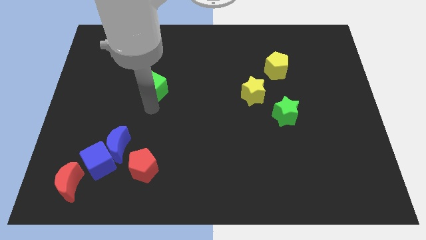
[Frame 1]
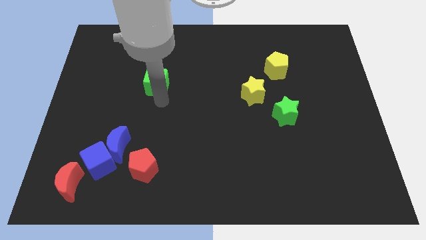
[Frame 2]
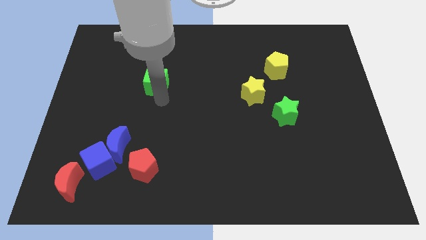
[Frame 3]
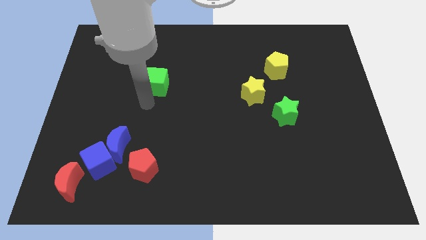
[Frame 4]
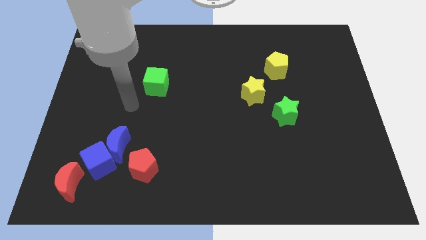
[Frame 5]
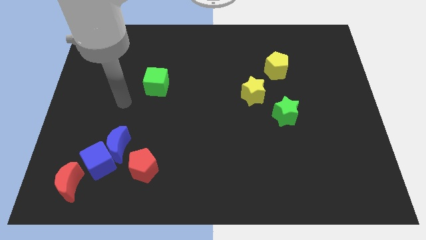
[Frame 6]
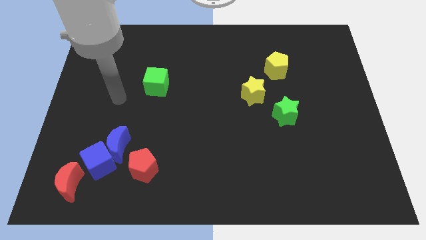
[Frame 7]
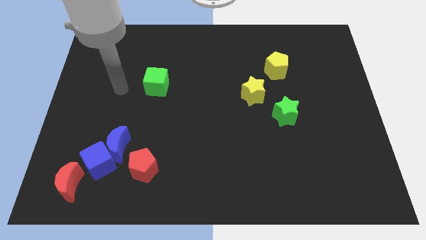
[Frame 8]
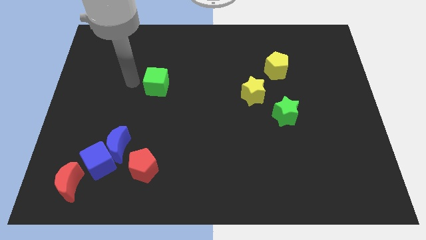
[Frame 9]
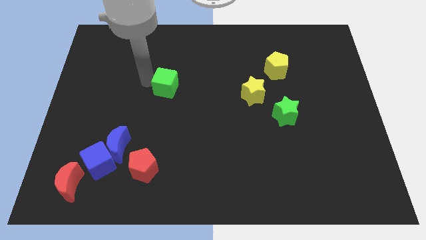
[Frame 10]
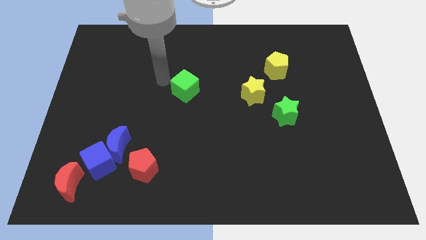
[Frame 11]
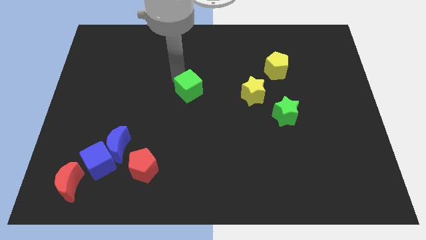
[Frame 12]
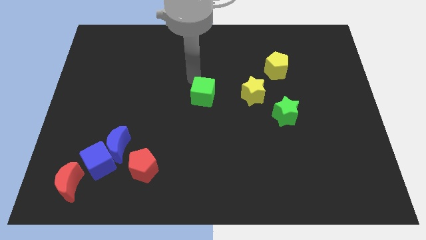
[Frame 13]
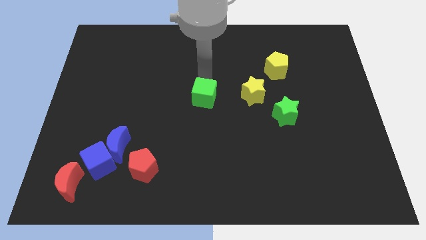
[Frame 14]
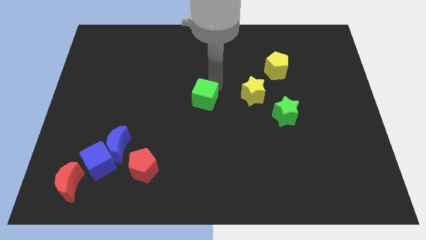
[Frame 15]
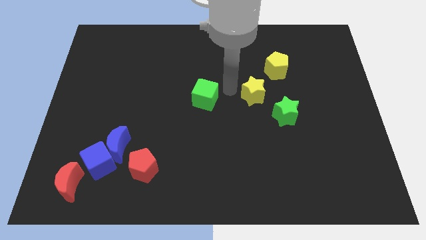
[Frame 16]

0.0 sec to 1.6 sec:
move the green cube to the left side of the yellow star

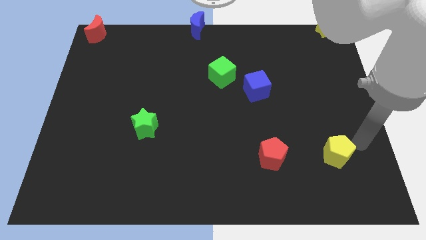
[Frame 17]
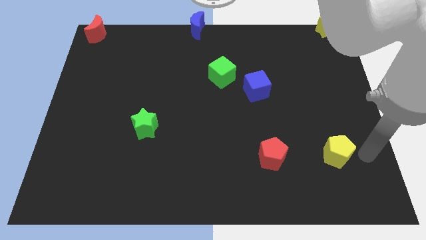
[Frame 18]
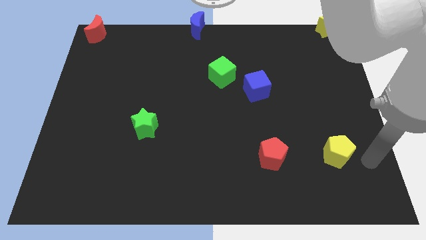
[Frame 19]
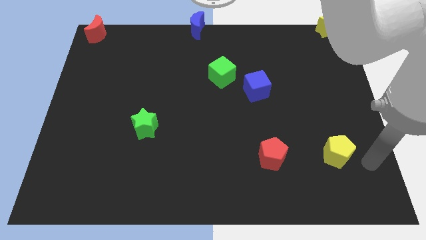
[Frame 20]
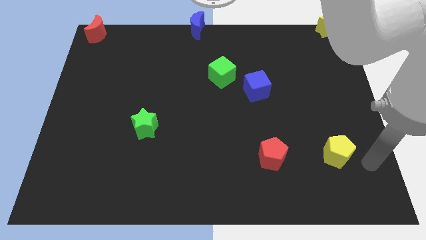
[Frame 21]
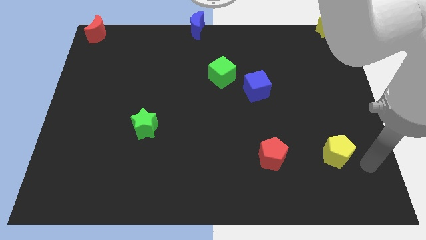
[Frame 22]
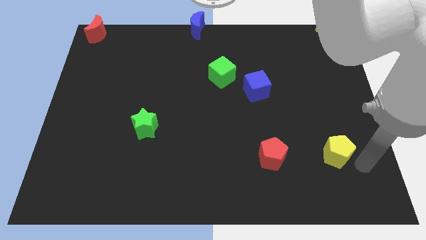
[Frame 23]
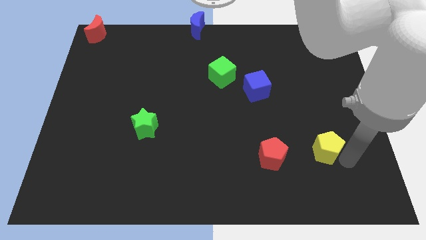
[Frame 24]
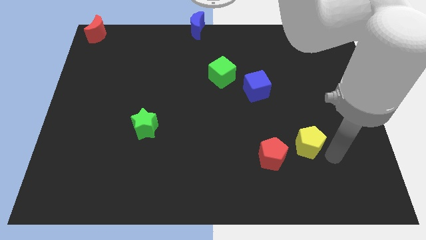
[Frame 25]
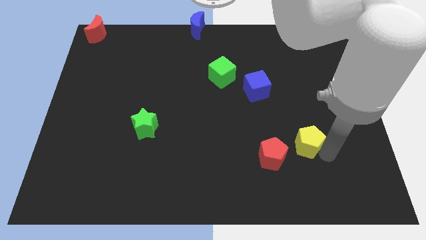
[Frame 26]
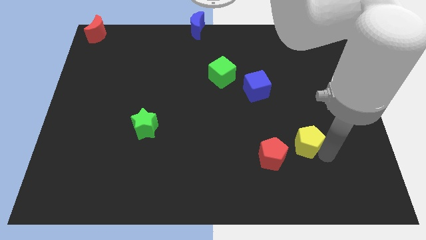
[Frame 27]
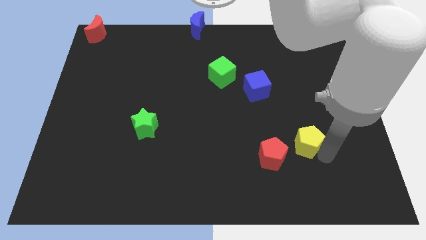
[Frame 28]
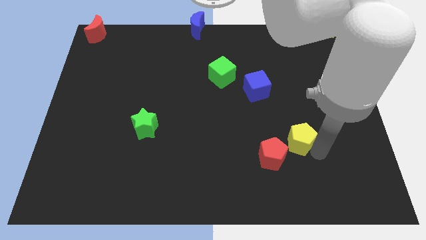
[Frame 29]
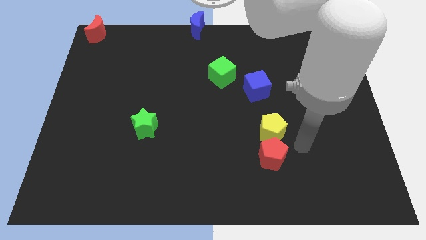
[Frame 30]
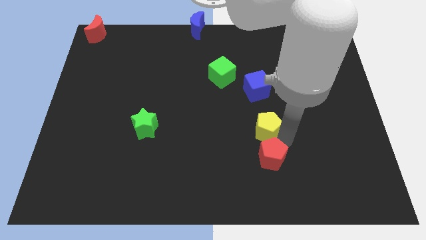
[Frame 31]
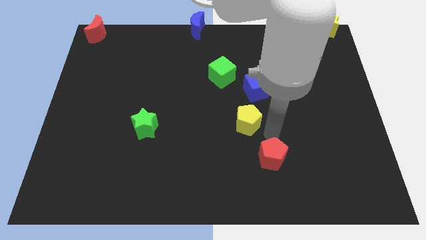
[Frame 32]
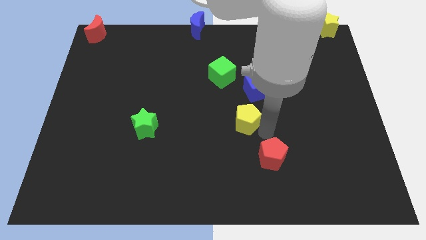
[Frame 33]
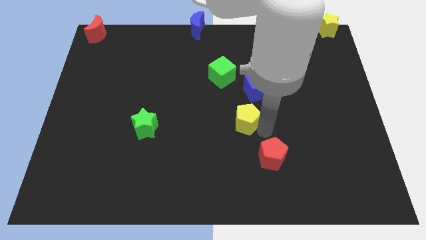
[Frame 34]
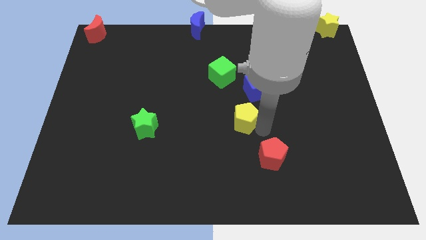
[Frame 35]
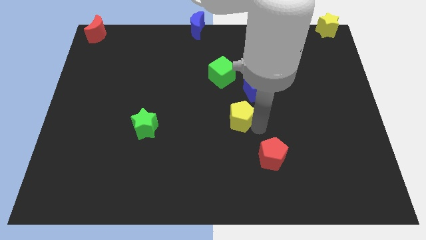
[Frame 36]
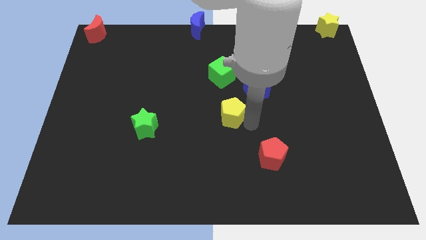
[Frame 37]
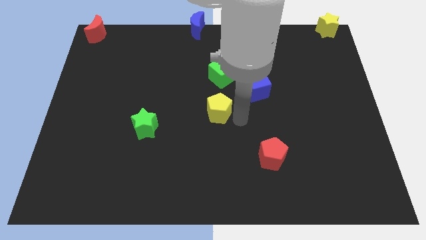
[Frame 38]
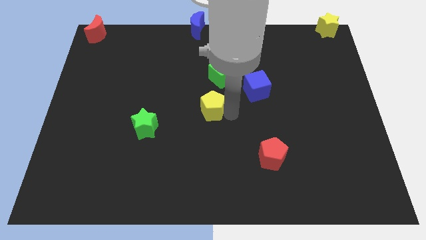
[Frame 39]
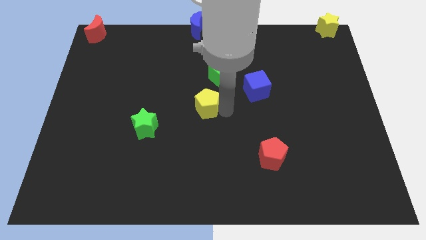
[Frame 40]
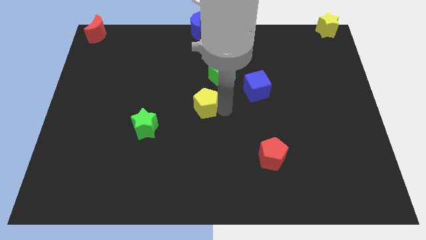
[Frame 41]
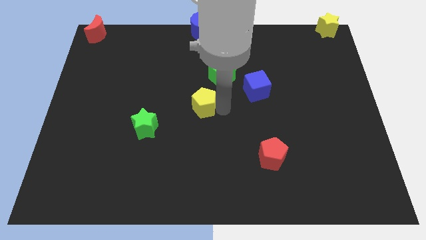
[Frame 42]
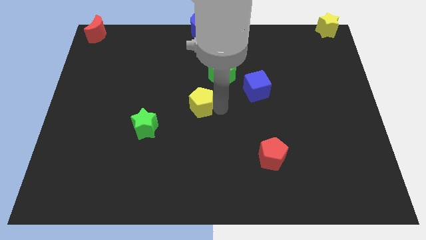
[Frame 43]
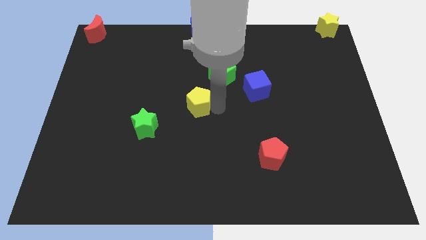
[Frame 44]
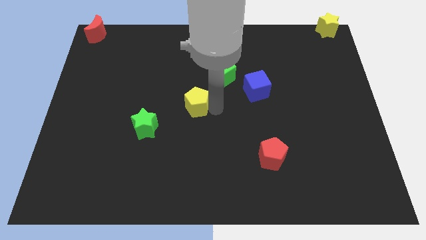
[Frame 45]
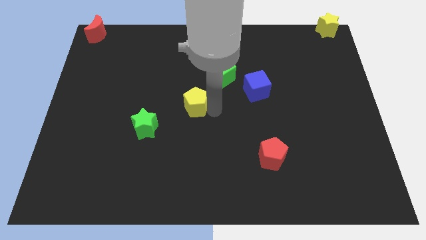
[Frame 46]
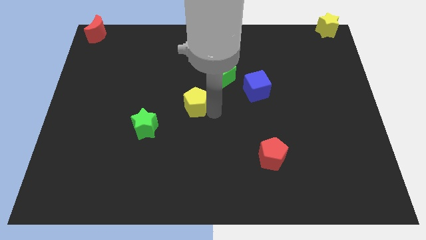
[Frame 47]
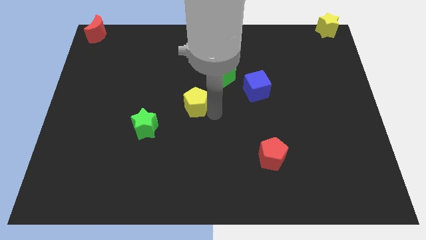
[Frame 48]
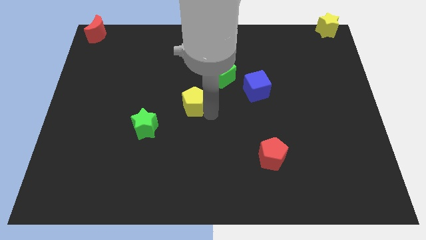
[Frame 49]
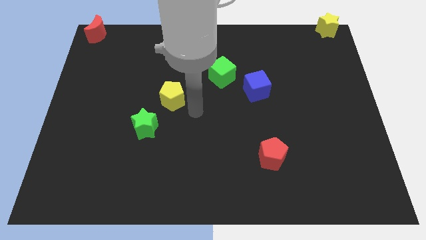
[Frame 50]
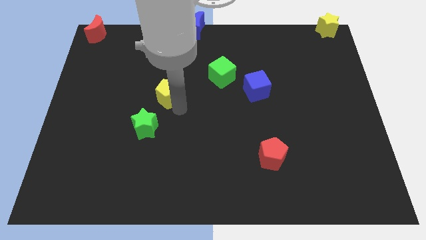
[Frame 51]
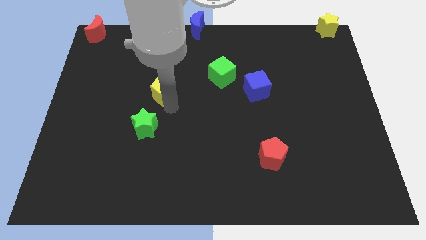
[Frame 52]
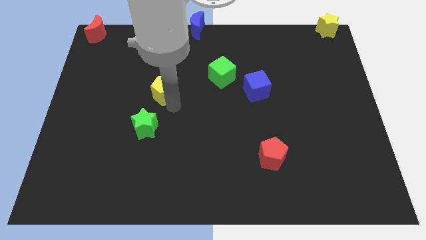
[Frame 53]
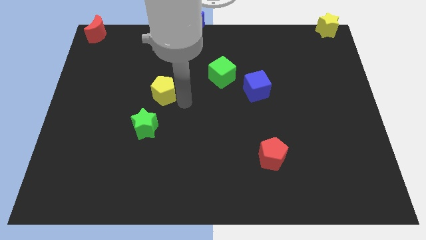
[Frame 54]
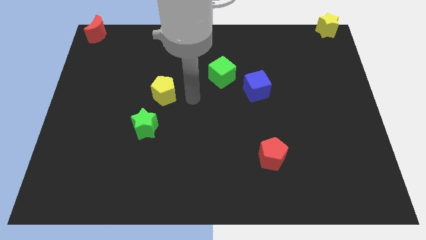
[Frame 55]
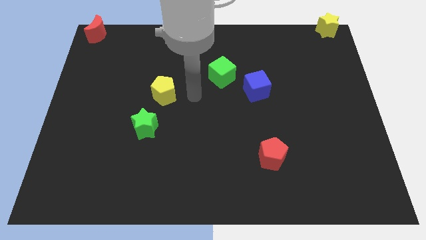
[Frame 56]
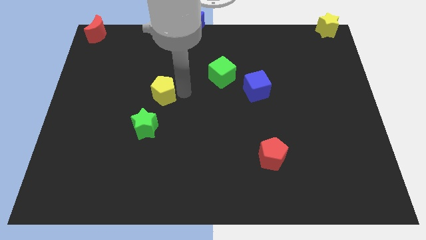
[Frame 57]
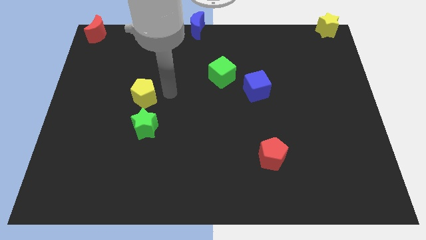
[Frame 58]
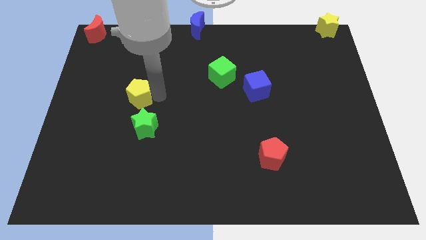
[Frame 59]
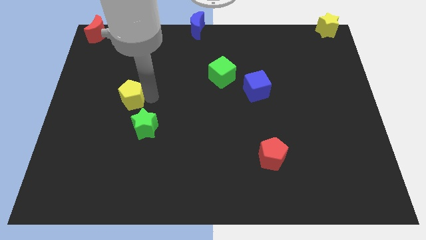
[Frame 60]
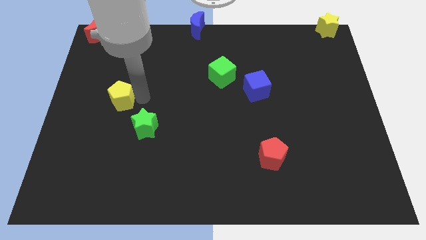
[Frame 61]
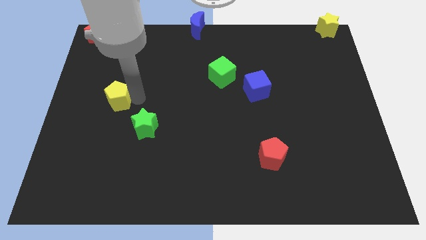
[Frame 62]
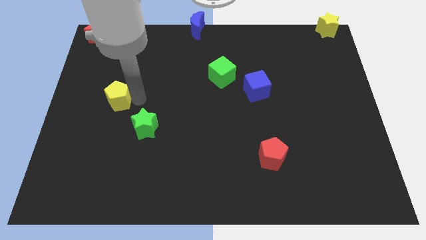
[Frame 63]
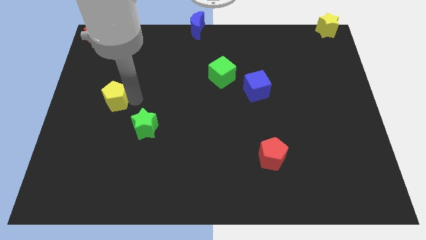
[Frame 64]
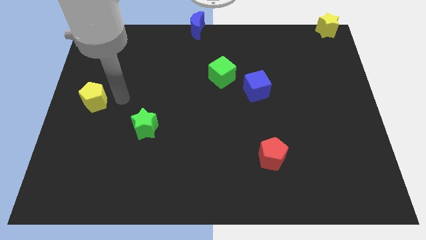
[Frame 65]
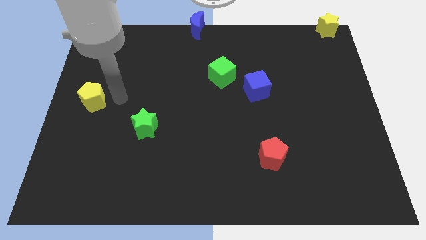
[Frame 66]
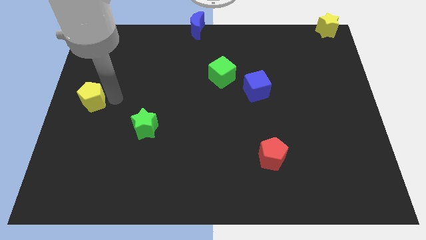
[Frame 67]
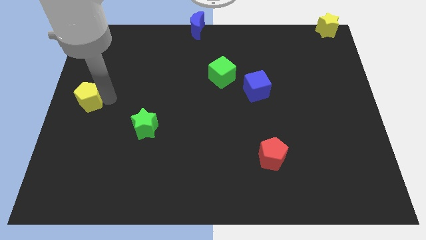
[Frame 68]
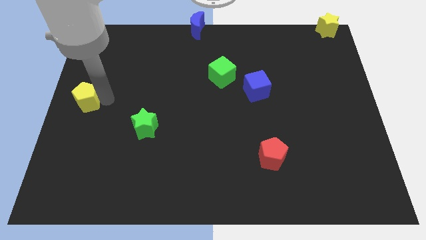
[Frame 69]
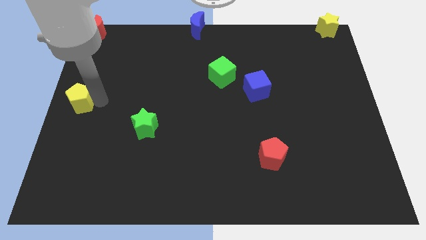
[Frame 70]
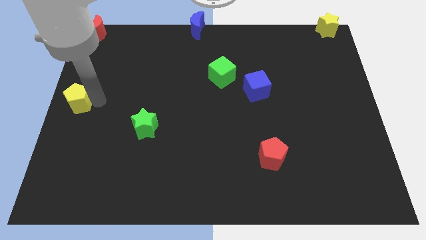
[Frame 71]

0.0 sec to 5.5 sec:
move yellow pentagon towards the center left

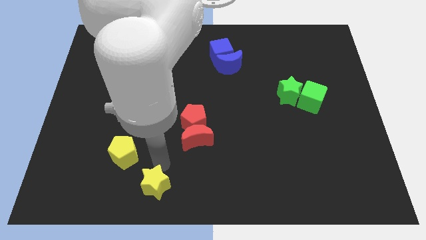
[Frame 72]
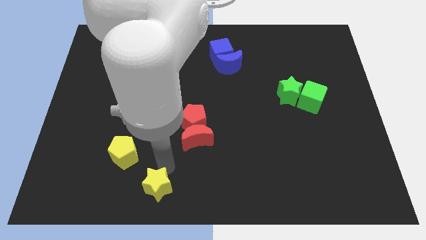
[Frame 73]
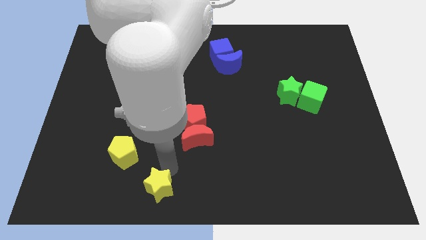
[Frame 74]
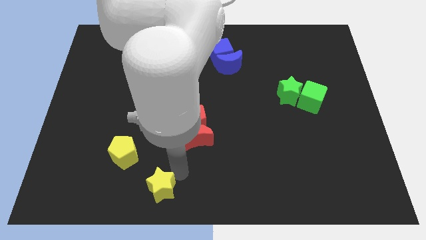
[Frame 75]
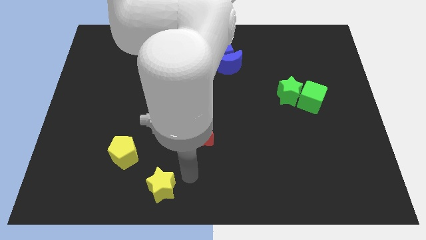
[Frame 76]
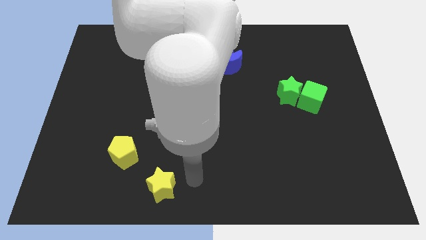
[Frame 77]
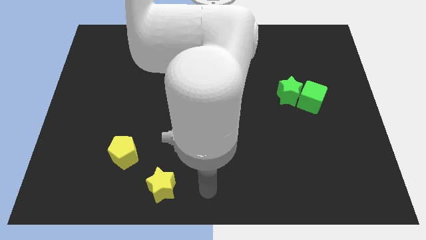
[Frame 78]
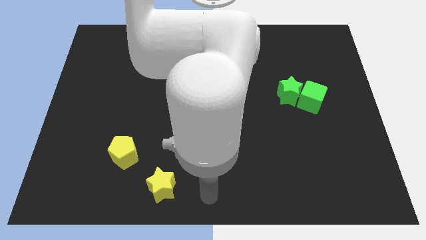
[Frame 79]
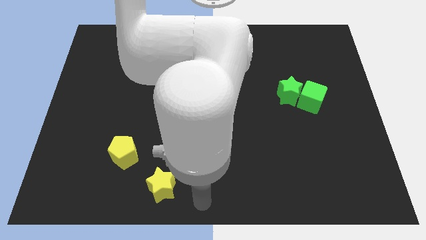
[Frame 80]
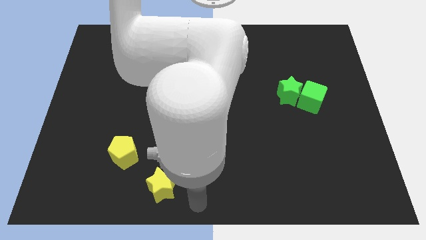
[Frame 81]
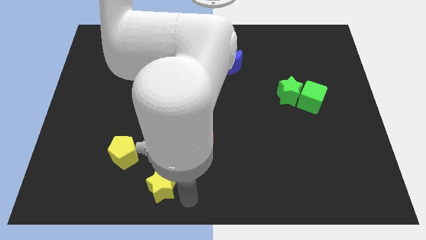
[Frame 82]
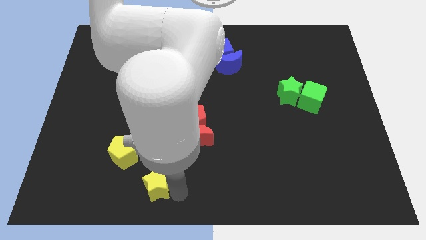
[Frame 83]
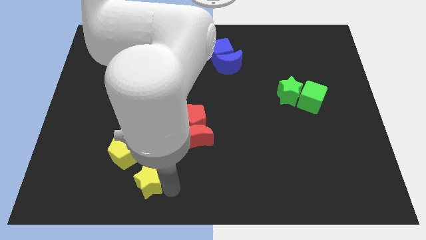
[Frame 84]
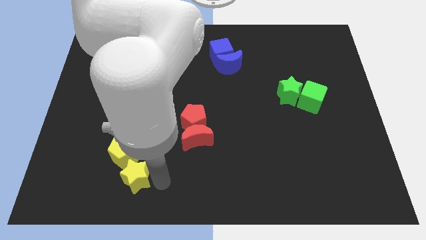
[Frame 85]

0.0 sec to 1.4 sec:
push the yellow star towards the bottom of the yellow pentagon

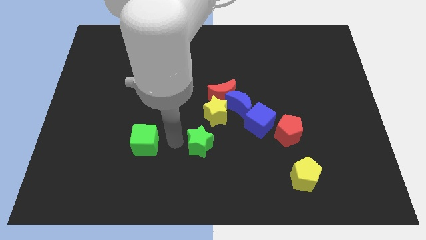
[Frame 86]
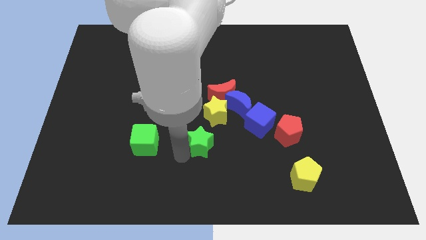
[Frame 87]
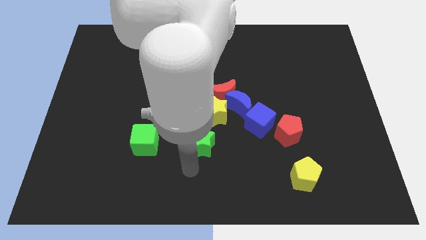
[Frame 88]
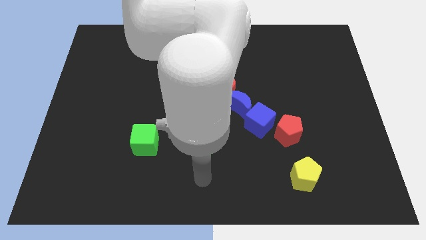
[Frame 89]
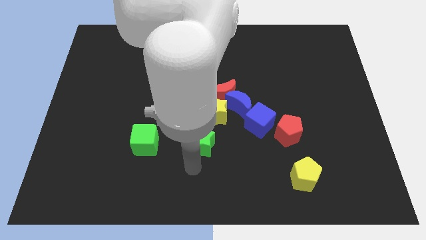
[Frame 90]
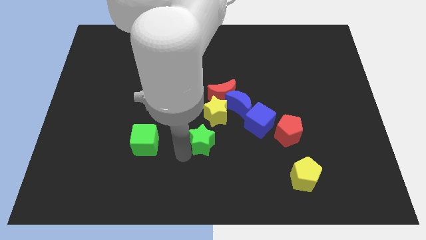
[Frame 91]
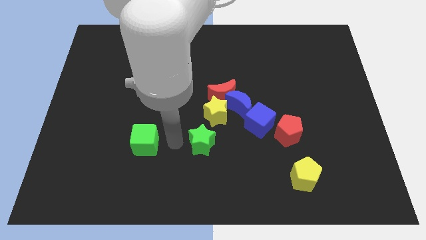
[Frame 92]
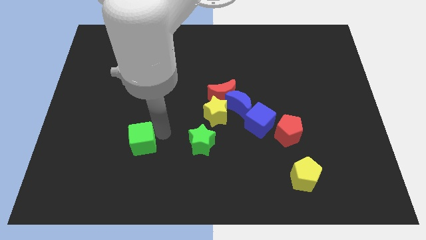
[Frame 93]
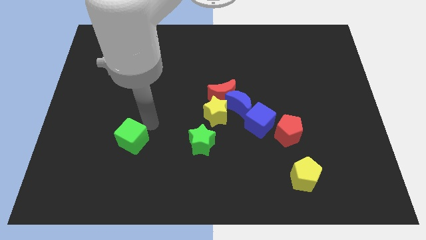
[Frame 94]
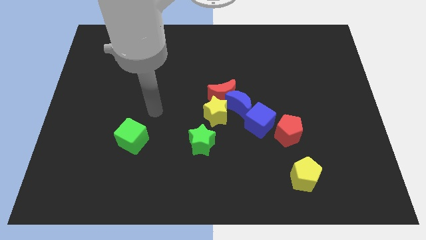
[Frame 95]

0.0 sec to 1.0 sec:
slightly push the green cube towards the left side of the board
